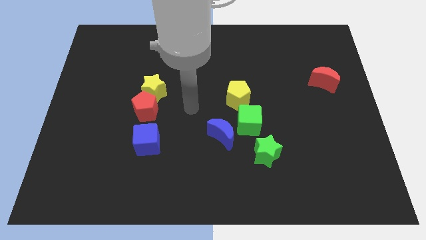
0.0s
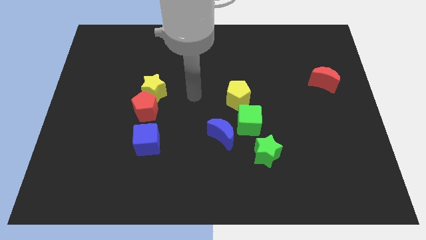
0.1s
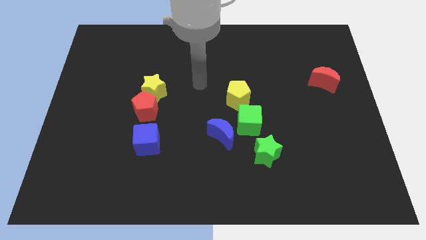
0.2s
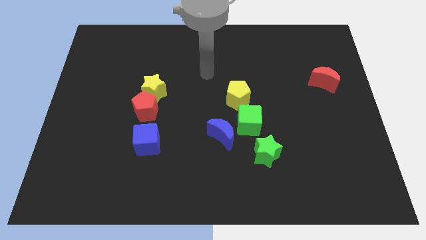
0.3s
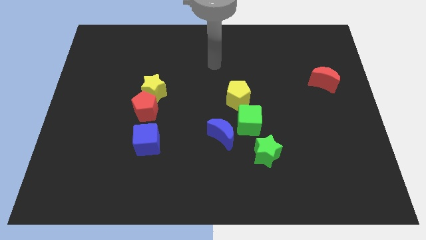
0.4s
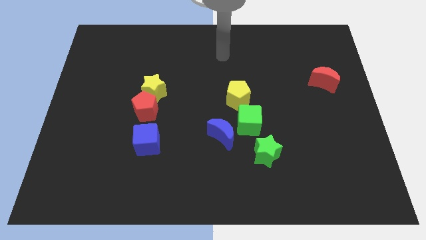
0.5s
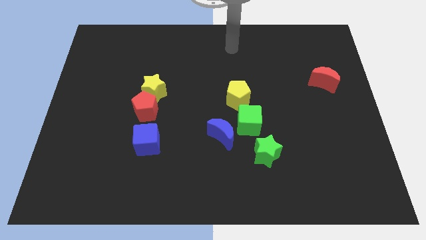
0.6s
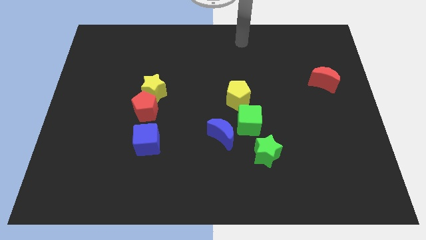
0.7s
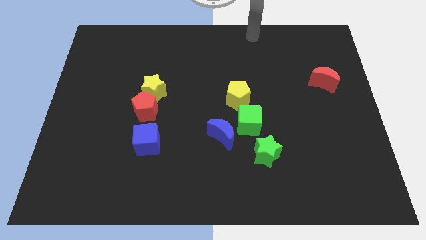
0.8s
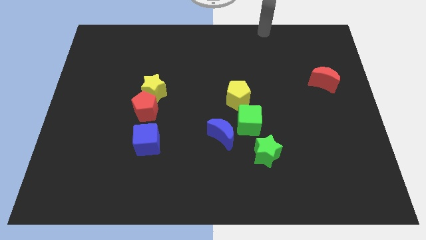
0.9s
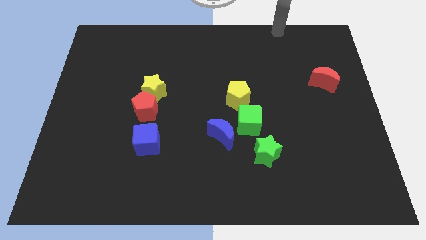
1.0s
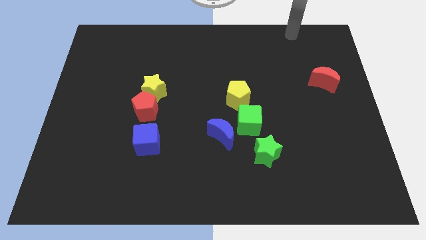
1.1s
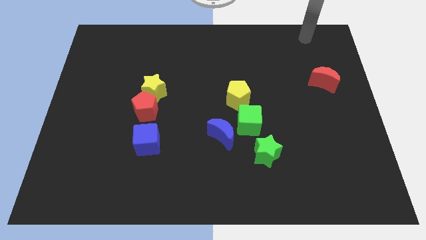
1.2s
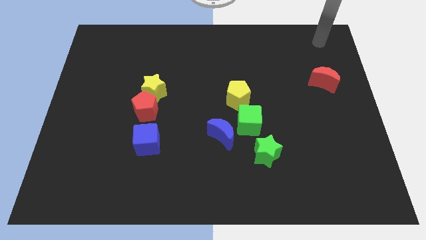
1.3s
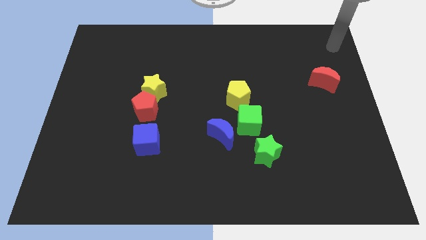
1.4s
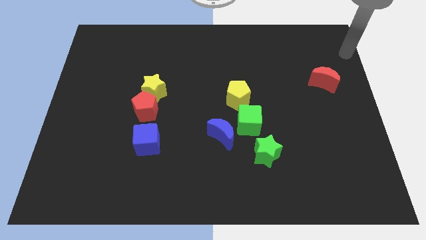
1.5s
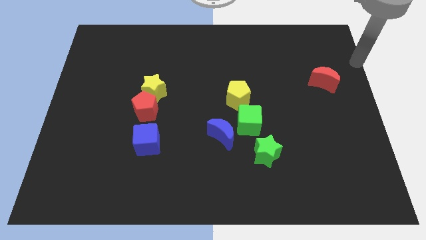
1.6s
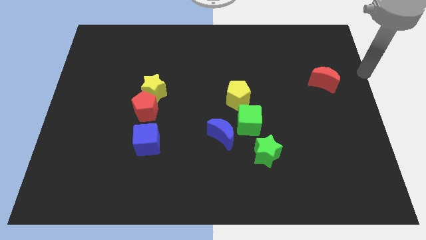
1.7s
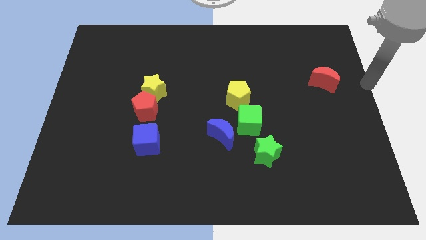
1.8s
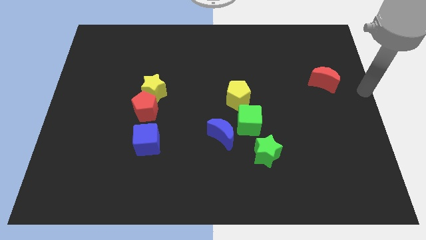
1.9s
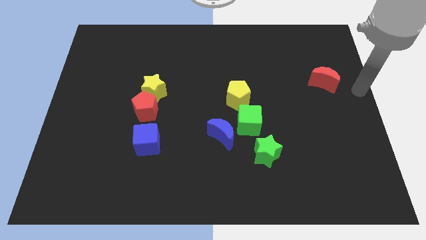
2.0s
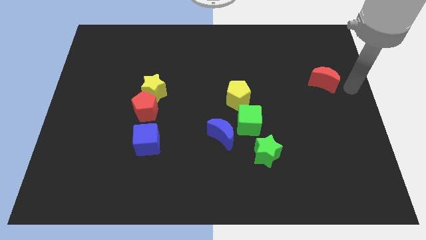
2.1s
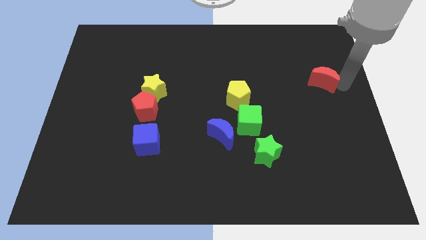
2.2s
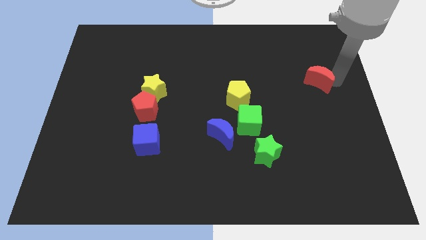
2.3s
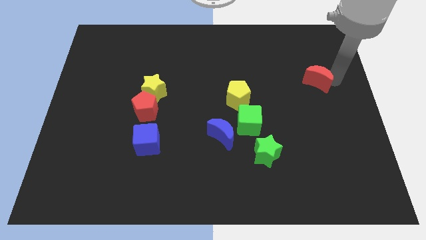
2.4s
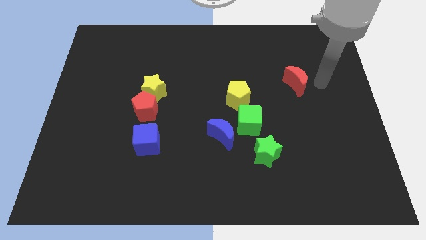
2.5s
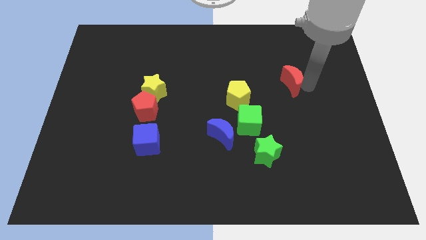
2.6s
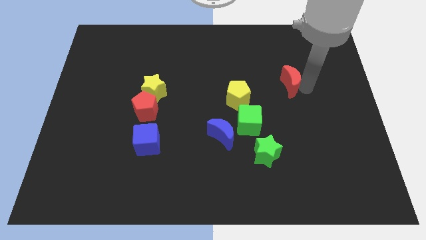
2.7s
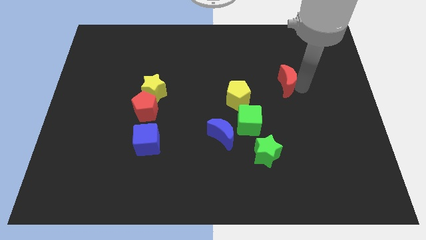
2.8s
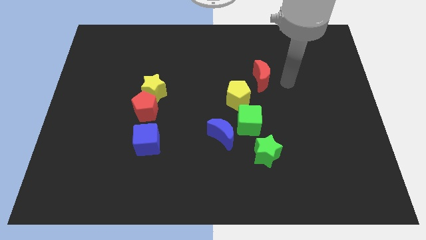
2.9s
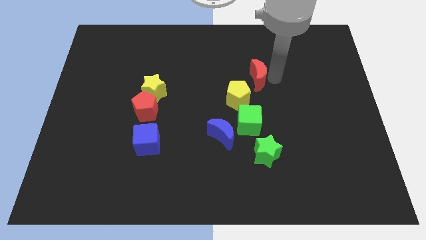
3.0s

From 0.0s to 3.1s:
move the red crescent to the top right of the yellow pentagon

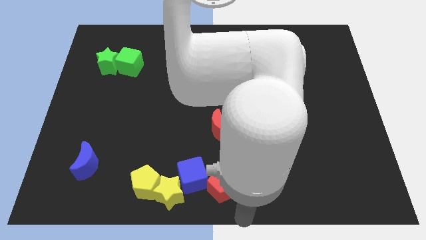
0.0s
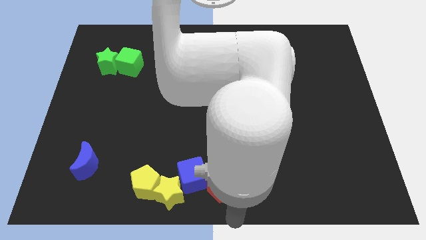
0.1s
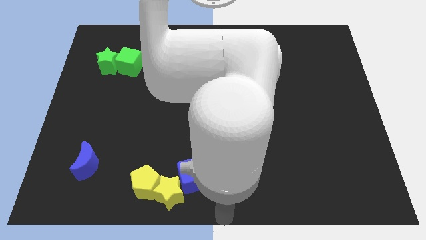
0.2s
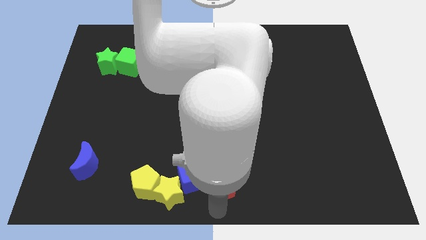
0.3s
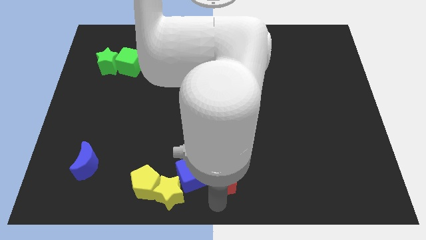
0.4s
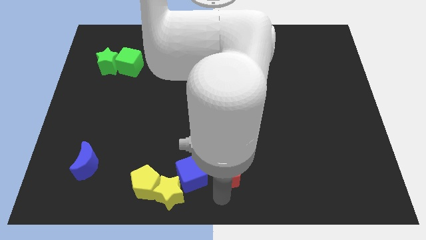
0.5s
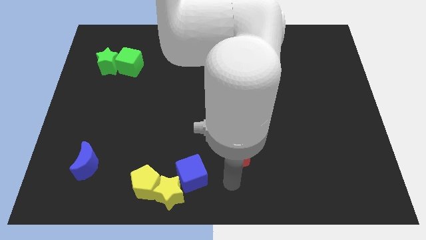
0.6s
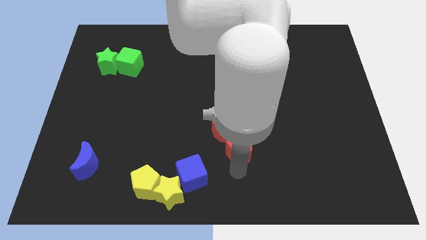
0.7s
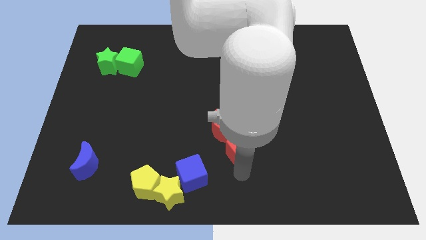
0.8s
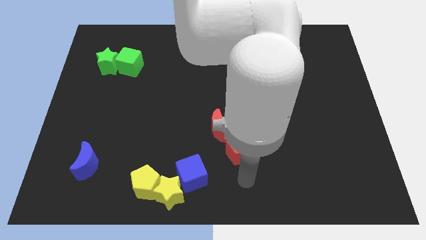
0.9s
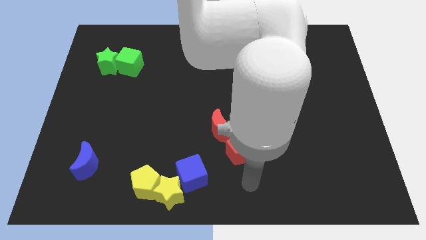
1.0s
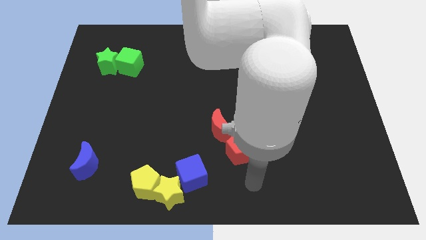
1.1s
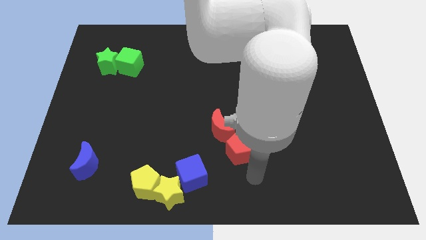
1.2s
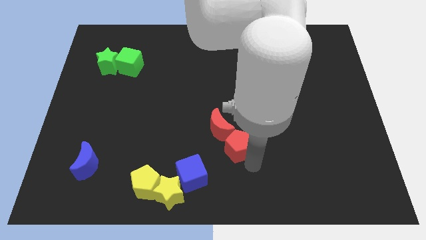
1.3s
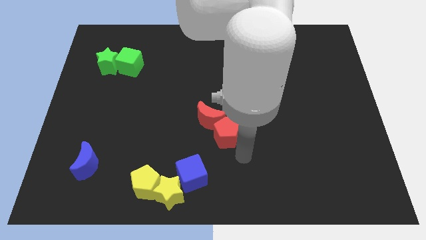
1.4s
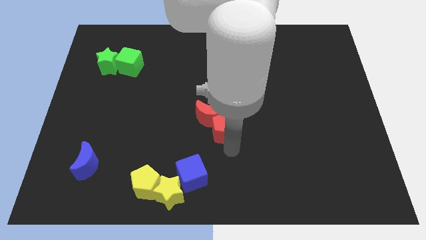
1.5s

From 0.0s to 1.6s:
push the red pentagon into red crescent

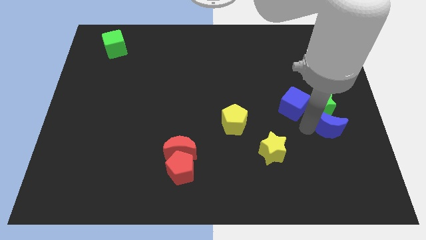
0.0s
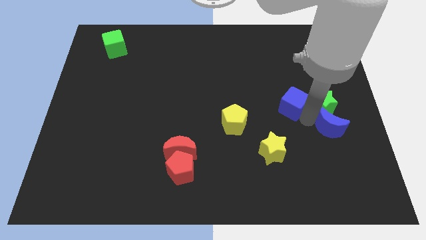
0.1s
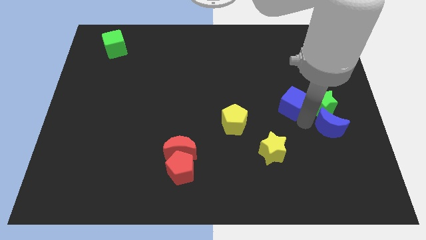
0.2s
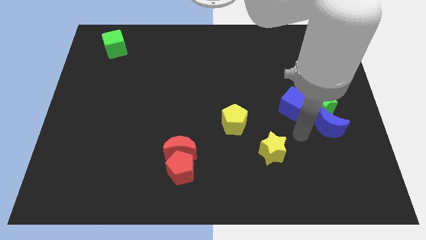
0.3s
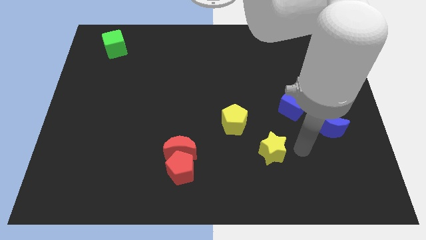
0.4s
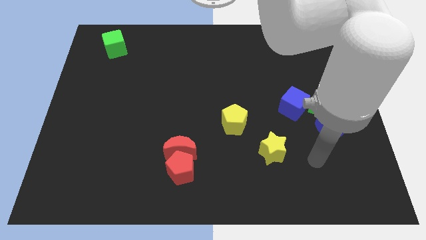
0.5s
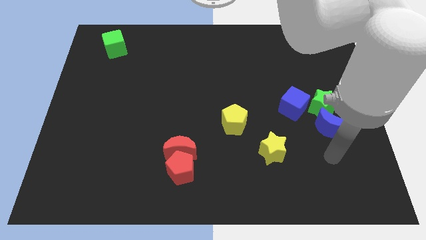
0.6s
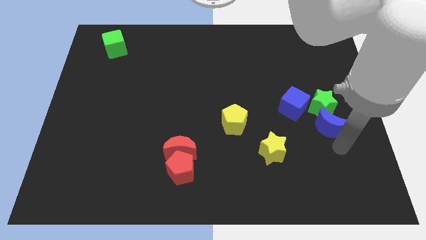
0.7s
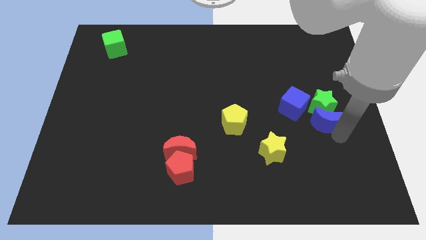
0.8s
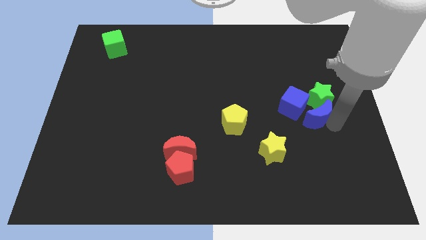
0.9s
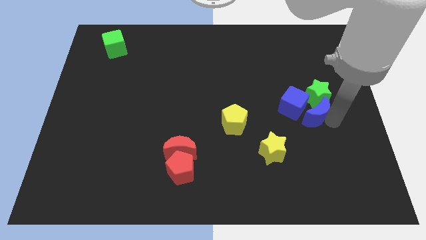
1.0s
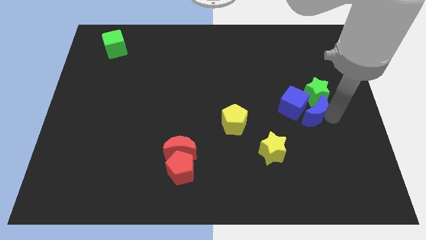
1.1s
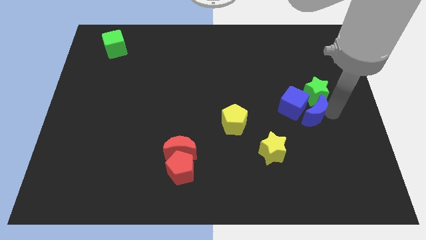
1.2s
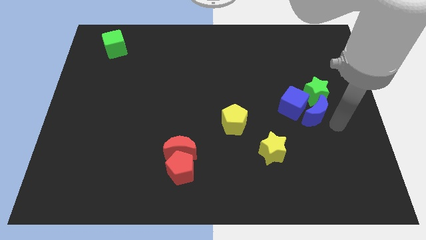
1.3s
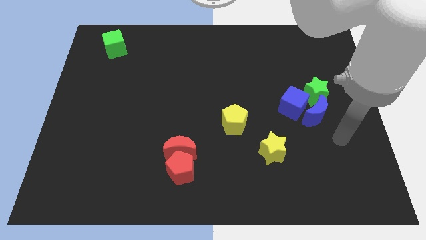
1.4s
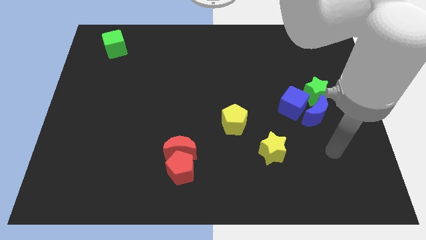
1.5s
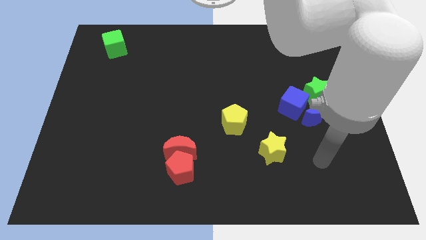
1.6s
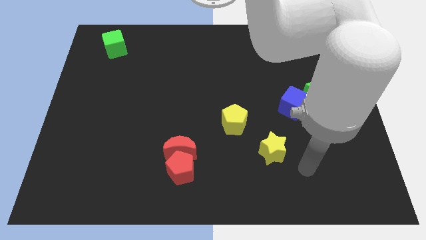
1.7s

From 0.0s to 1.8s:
move the blue crescent to the right of the blue cube

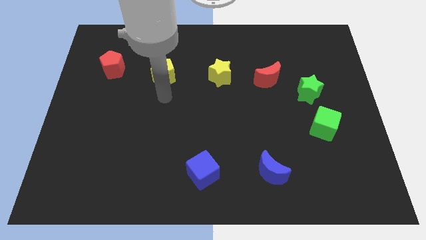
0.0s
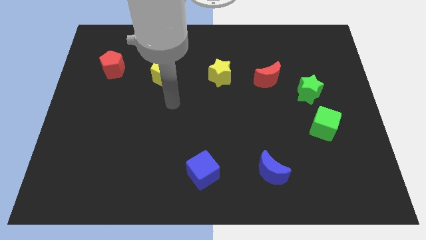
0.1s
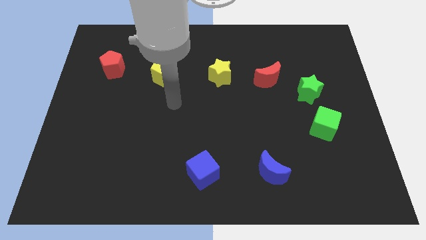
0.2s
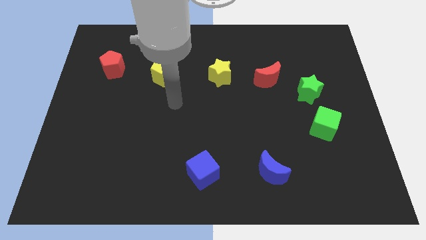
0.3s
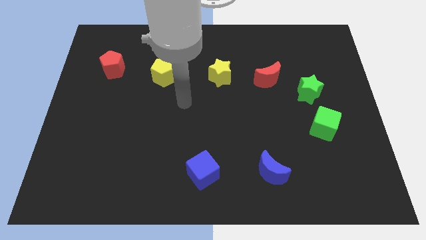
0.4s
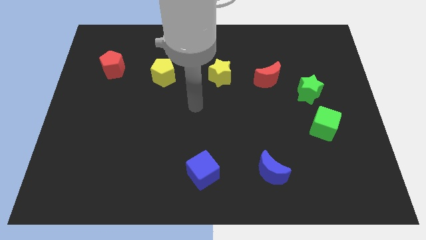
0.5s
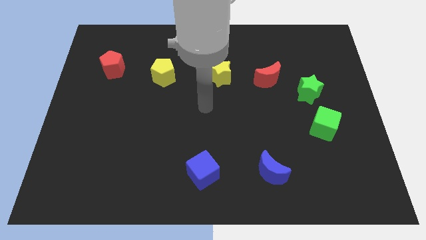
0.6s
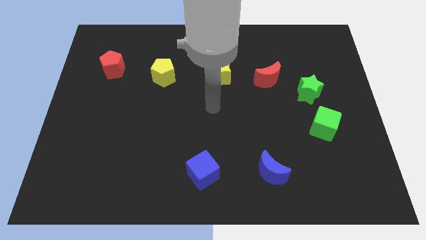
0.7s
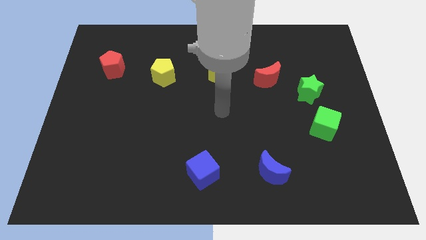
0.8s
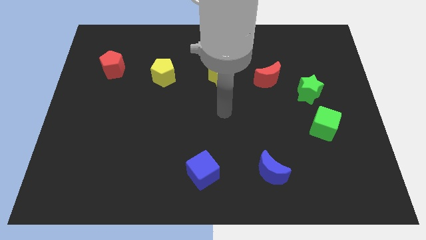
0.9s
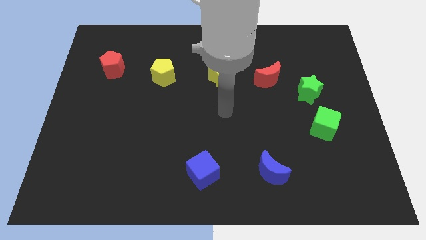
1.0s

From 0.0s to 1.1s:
point your hand below the yellow star

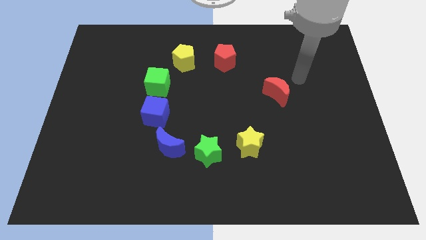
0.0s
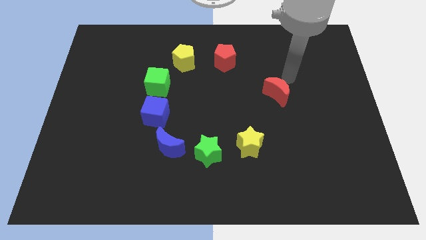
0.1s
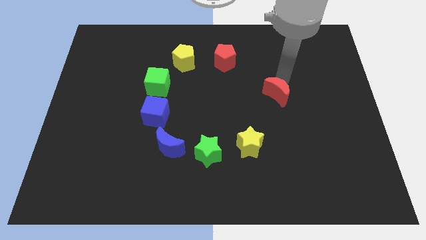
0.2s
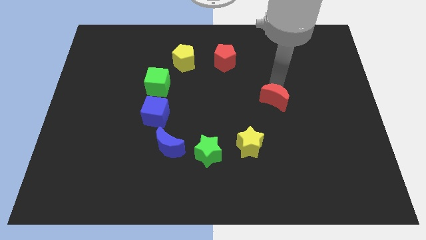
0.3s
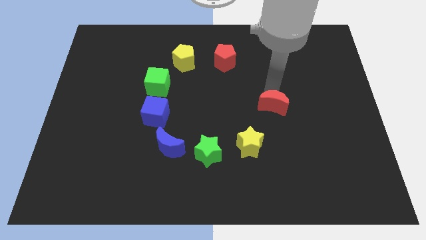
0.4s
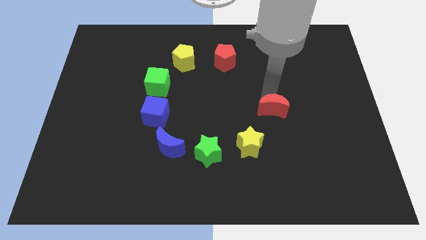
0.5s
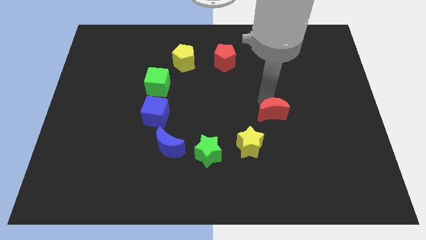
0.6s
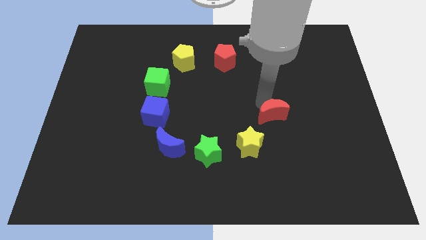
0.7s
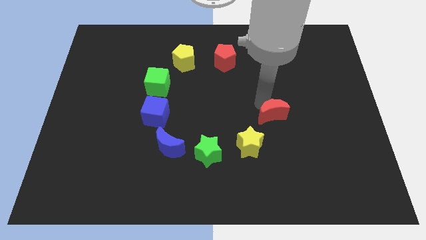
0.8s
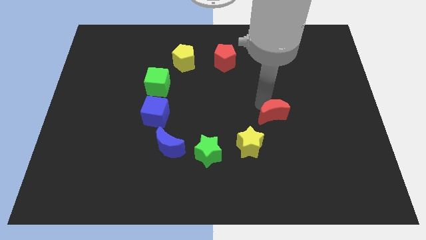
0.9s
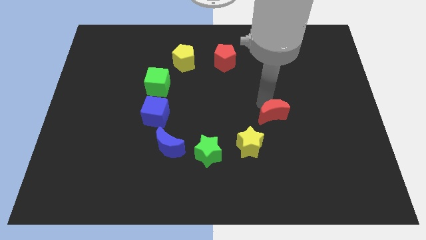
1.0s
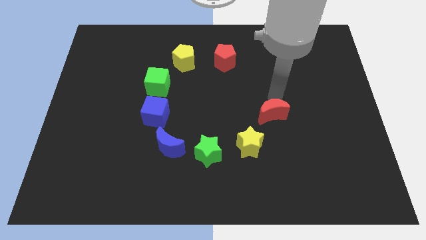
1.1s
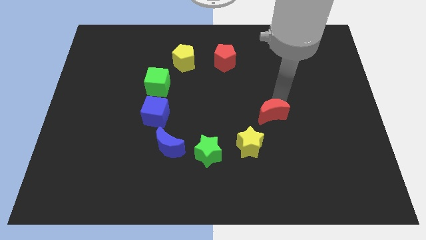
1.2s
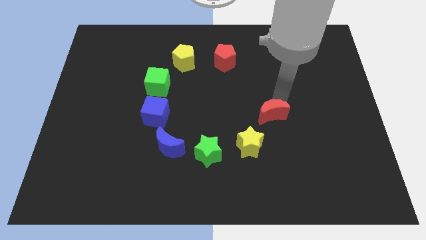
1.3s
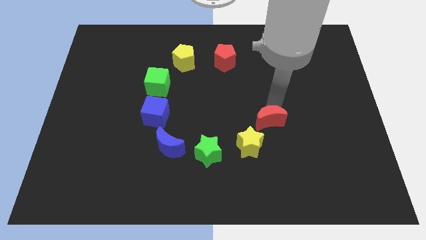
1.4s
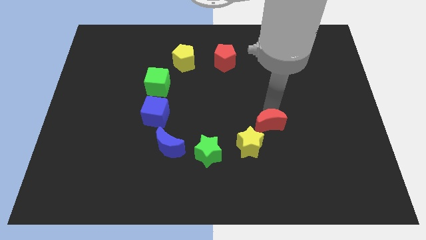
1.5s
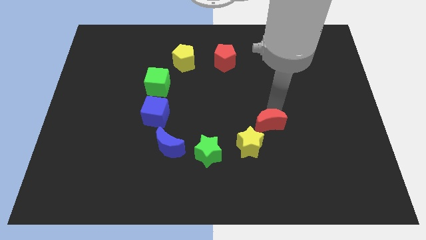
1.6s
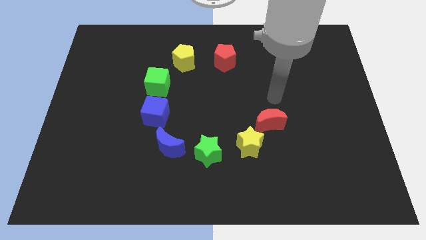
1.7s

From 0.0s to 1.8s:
push the red moon close to the yellow star
